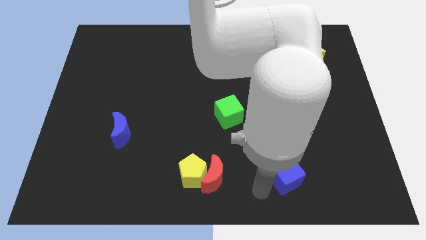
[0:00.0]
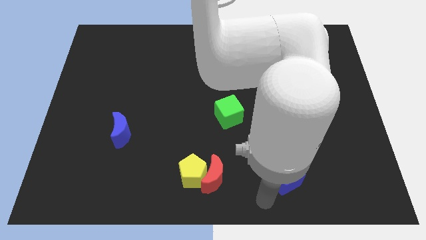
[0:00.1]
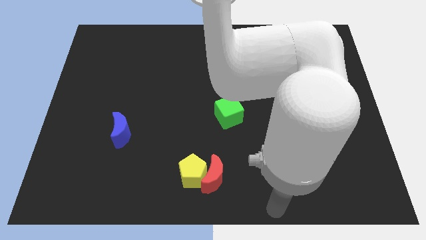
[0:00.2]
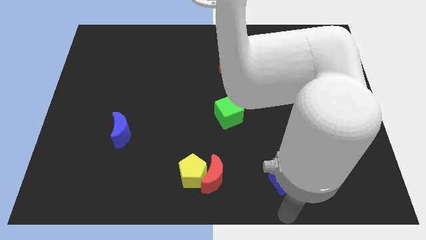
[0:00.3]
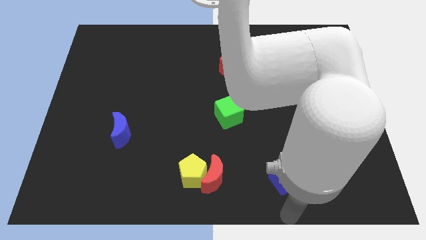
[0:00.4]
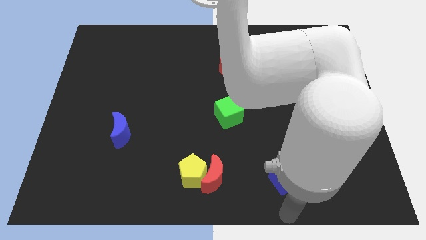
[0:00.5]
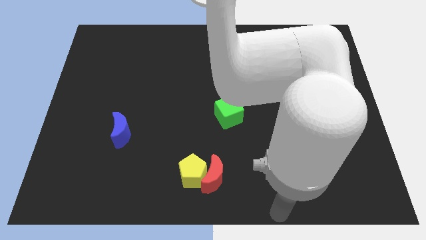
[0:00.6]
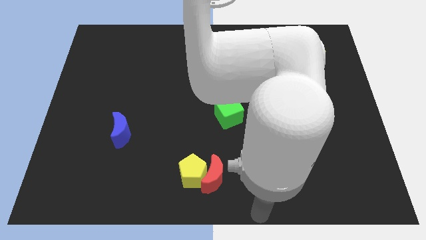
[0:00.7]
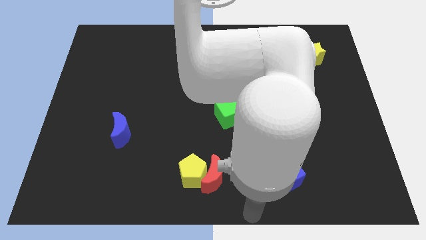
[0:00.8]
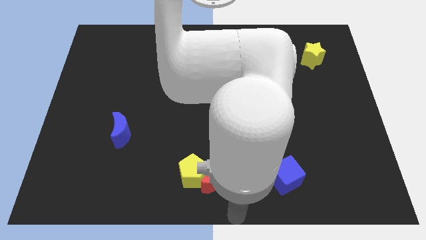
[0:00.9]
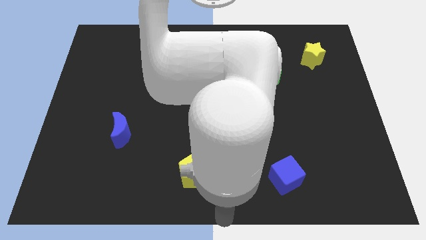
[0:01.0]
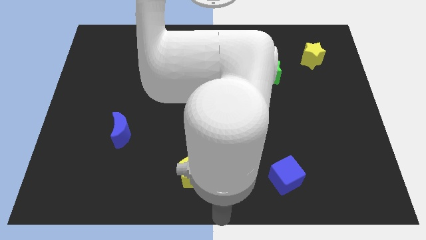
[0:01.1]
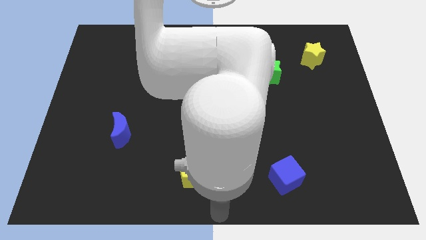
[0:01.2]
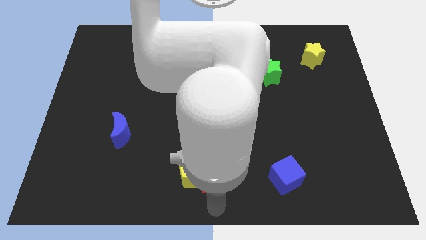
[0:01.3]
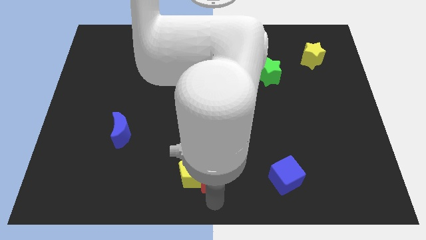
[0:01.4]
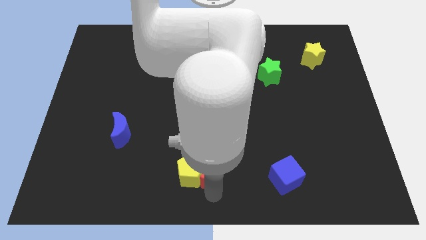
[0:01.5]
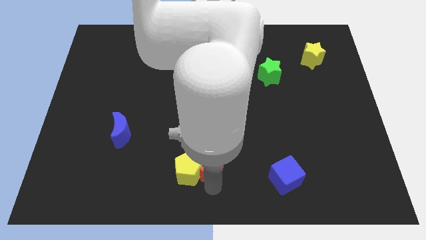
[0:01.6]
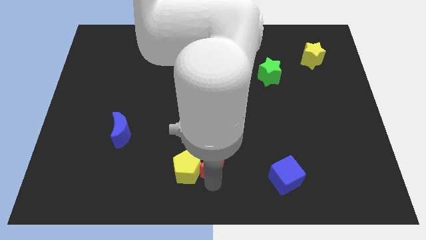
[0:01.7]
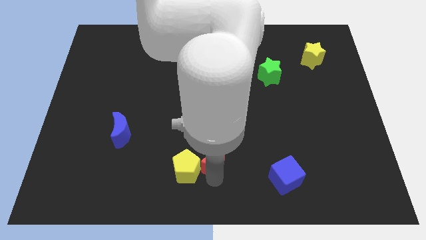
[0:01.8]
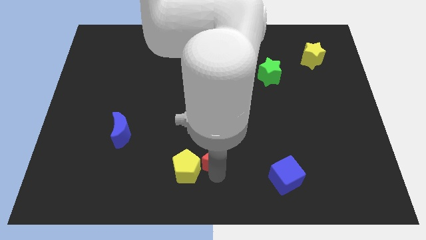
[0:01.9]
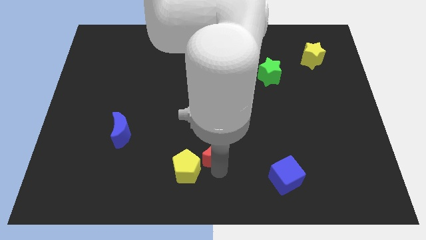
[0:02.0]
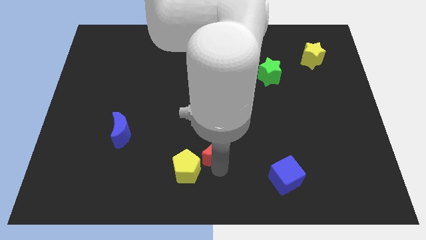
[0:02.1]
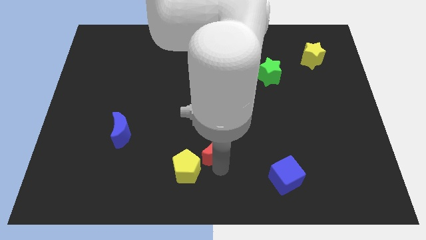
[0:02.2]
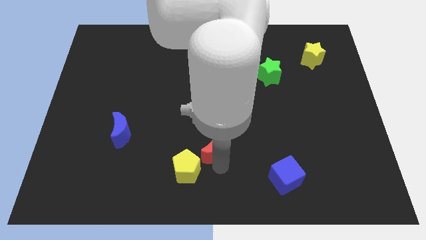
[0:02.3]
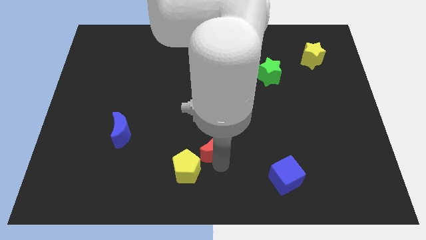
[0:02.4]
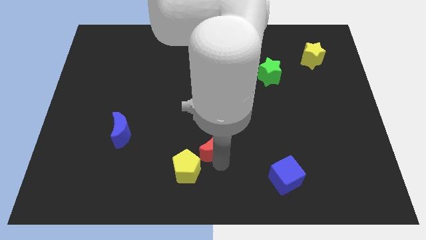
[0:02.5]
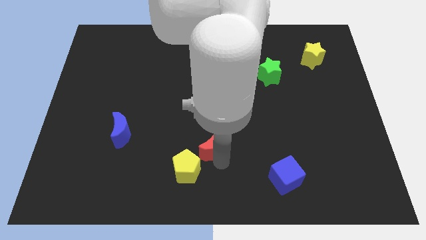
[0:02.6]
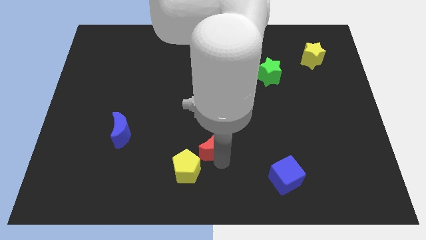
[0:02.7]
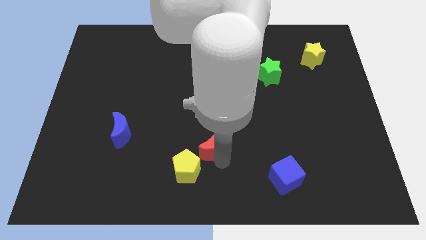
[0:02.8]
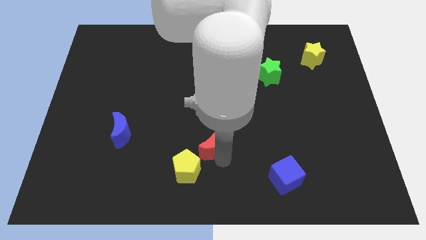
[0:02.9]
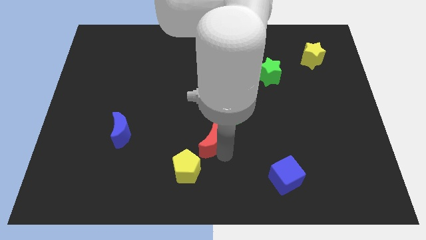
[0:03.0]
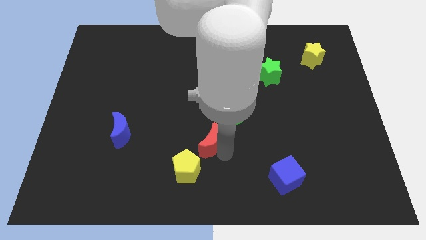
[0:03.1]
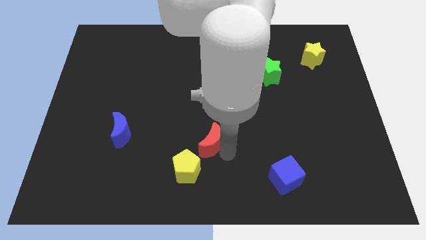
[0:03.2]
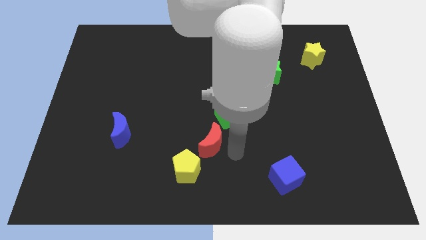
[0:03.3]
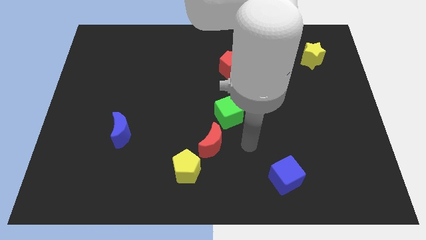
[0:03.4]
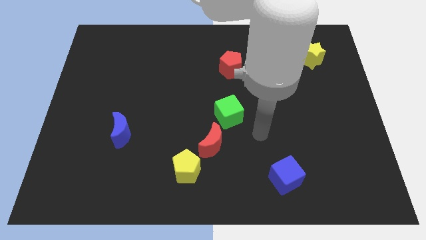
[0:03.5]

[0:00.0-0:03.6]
move the red moon upwards

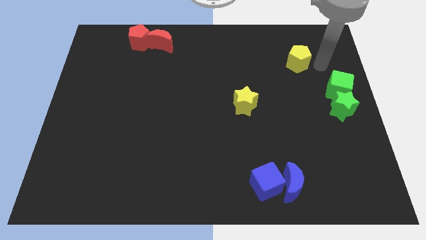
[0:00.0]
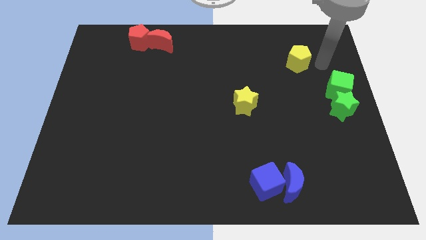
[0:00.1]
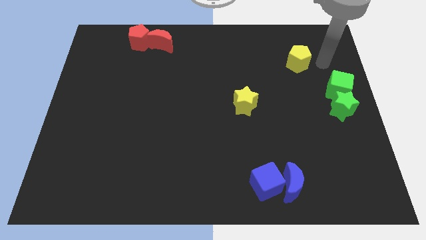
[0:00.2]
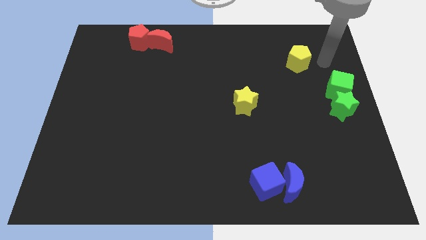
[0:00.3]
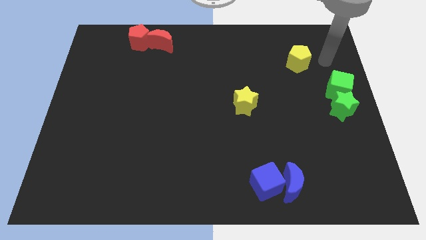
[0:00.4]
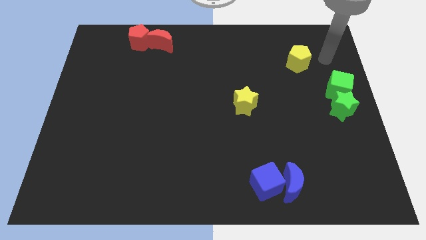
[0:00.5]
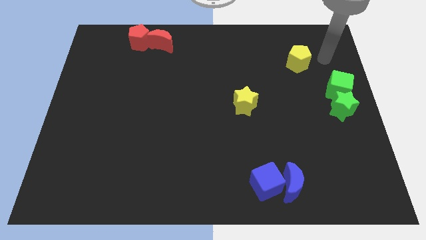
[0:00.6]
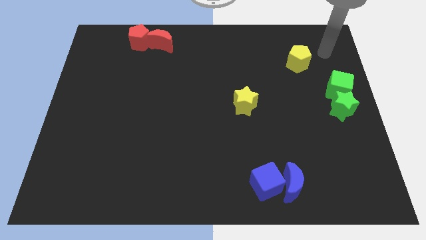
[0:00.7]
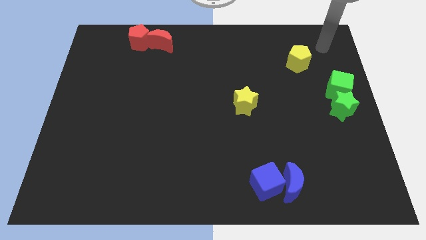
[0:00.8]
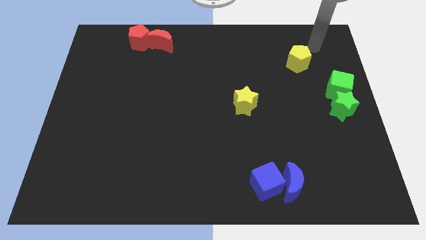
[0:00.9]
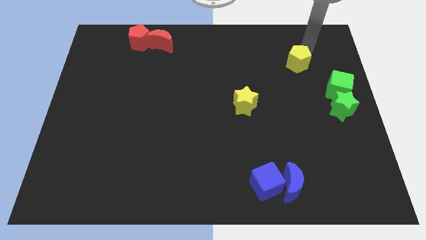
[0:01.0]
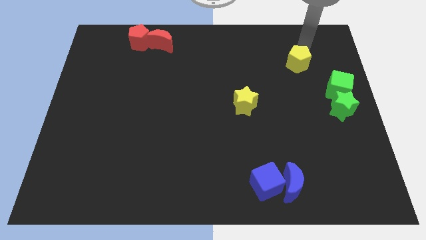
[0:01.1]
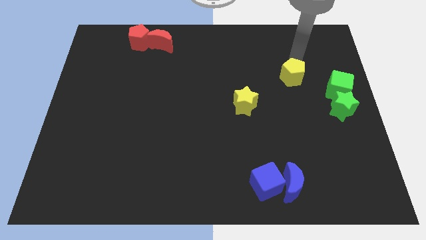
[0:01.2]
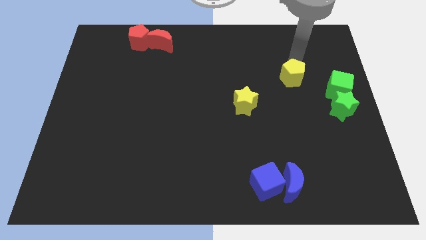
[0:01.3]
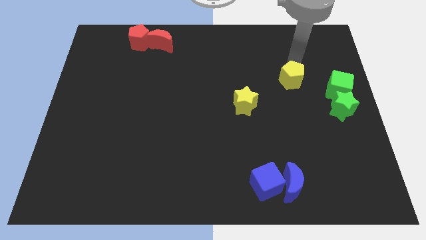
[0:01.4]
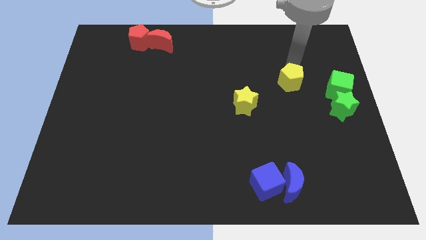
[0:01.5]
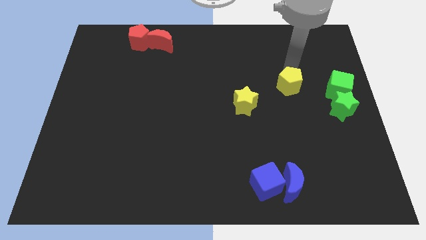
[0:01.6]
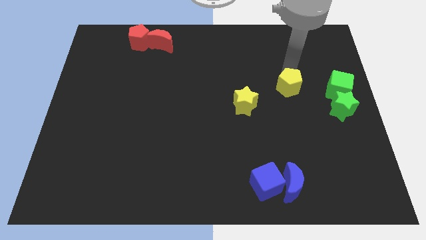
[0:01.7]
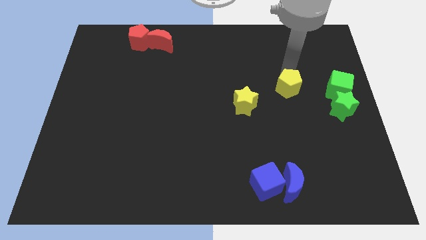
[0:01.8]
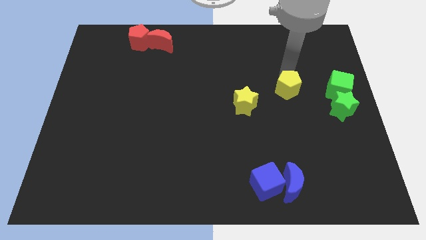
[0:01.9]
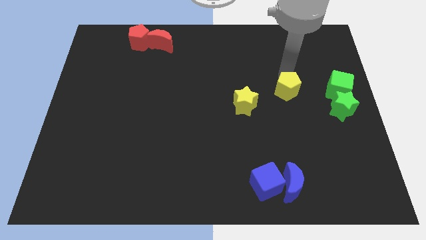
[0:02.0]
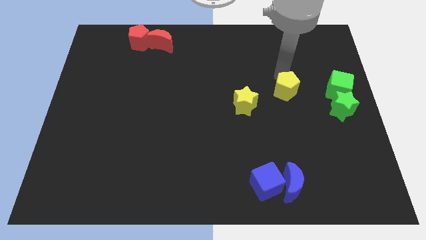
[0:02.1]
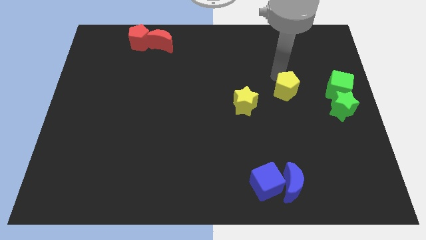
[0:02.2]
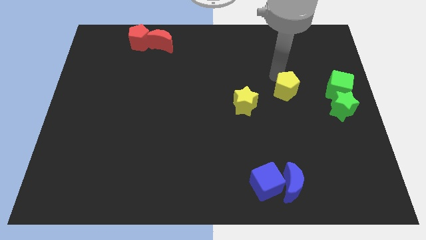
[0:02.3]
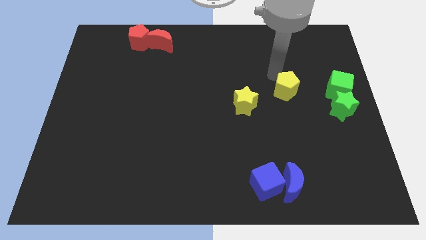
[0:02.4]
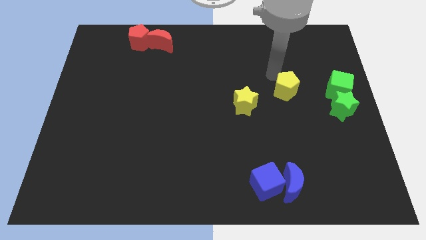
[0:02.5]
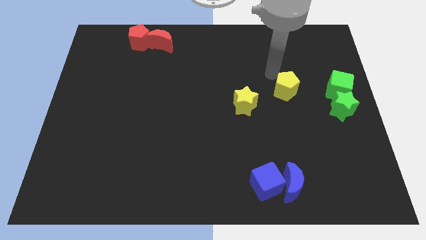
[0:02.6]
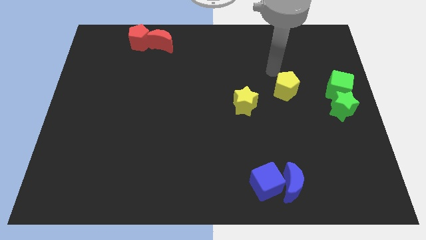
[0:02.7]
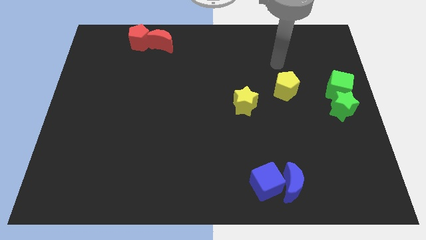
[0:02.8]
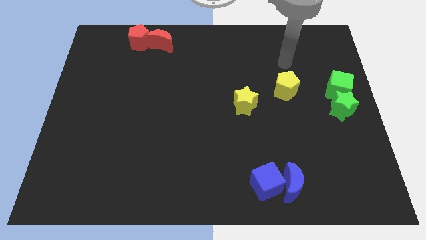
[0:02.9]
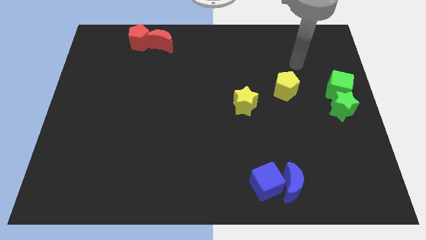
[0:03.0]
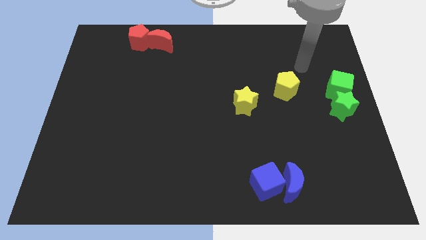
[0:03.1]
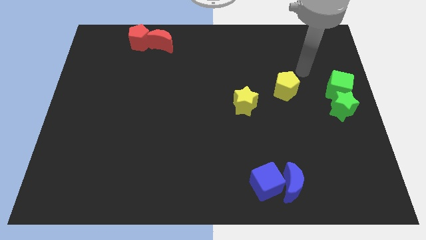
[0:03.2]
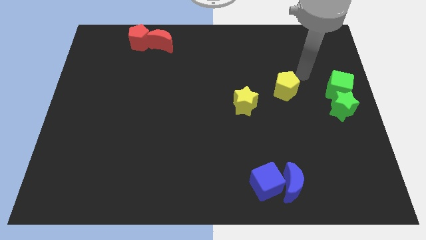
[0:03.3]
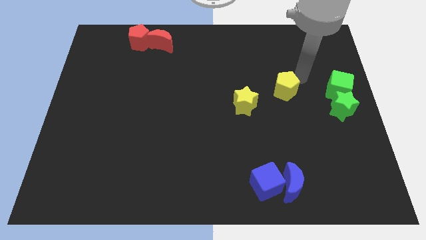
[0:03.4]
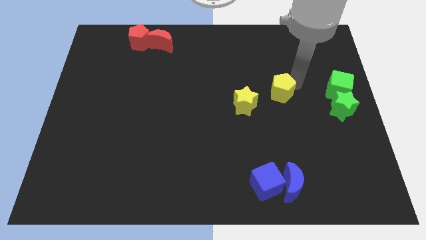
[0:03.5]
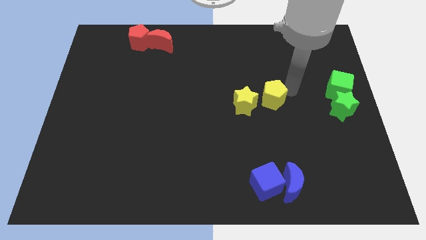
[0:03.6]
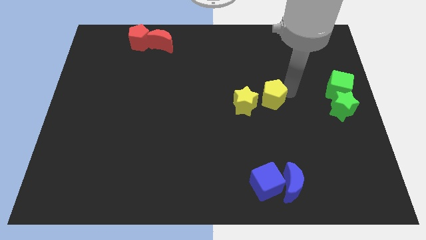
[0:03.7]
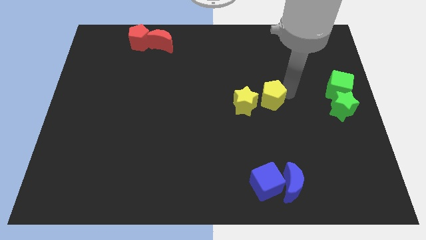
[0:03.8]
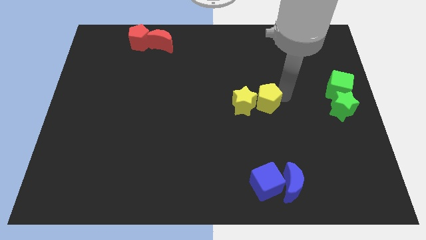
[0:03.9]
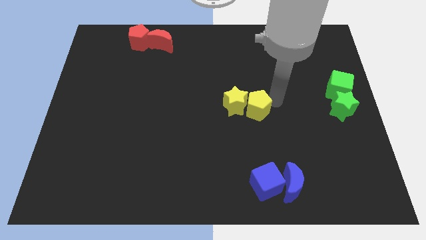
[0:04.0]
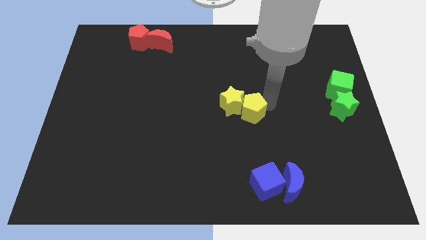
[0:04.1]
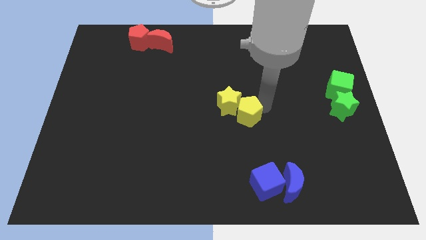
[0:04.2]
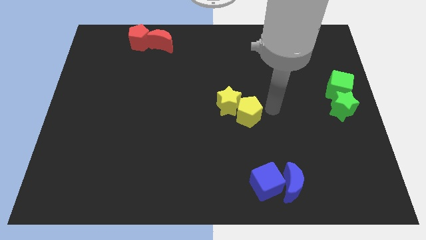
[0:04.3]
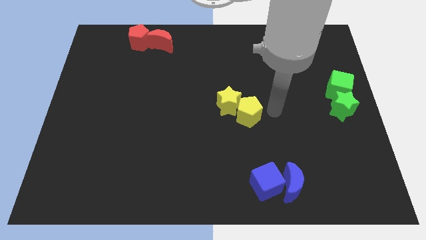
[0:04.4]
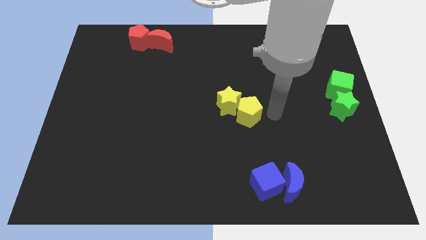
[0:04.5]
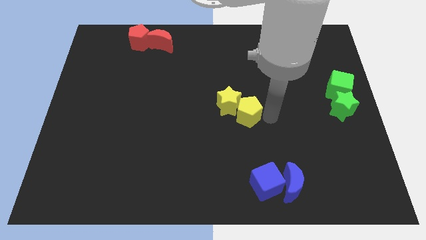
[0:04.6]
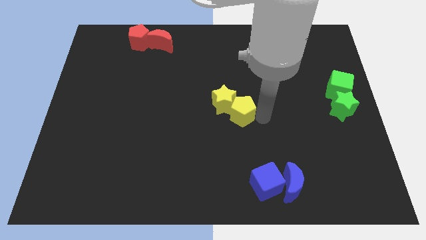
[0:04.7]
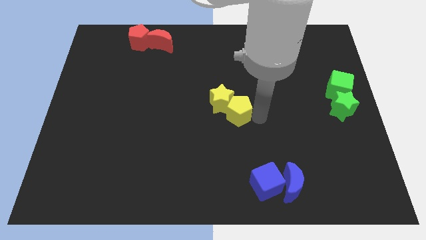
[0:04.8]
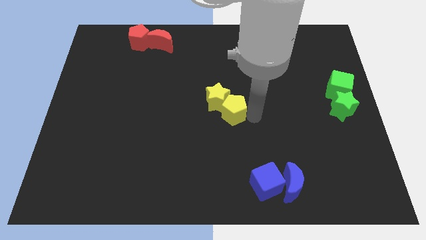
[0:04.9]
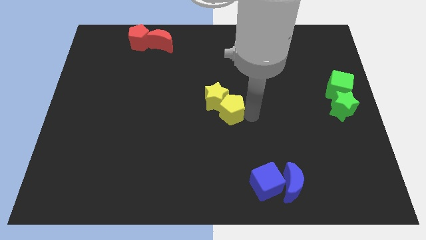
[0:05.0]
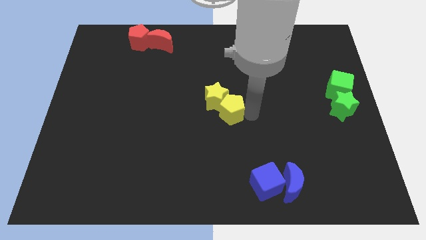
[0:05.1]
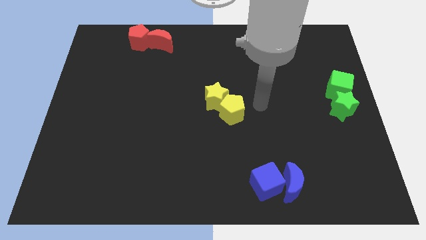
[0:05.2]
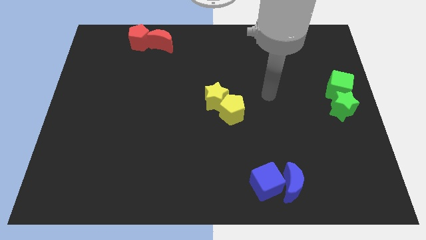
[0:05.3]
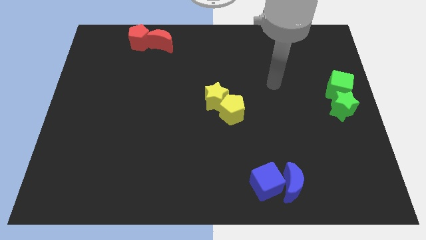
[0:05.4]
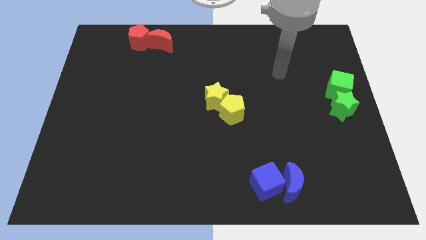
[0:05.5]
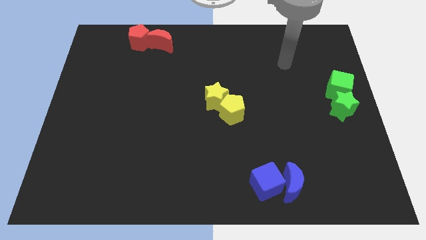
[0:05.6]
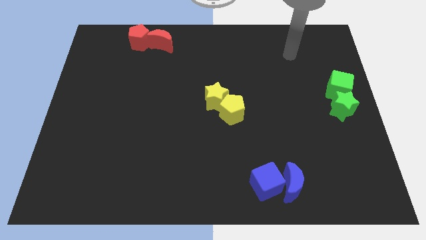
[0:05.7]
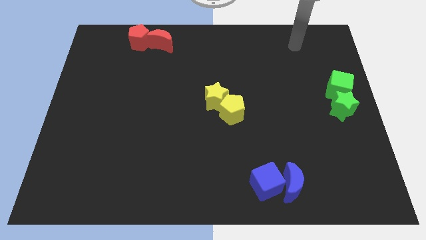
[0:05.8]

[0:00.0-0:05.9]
push the yellow star and the yellow pentagon to the center of the board
